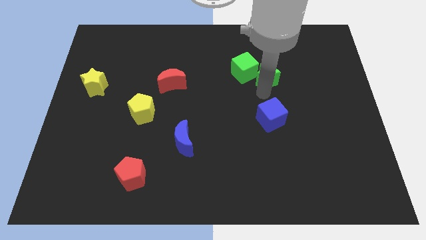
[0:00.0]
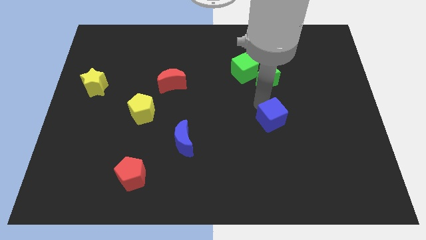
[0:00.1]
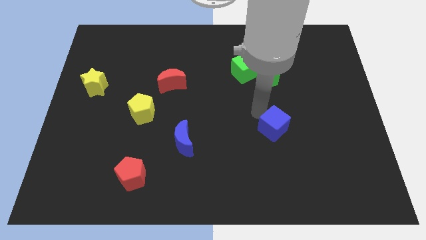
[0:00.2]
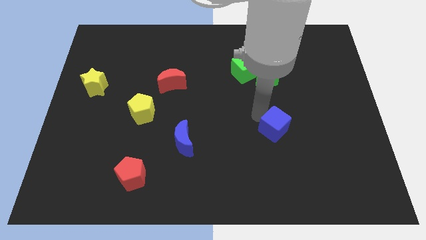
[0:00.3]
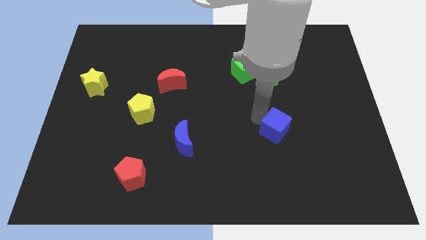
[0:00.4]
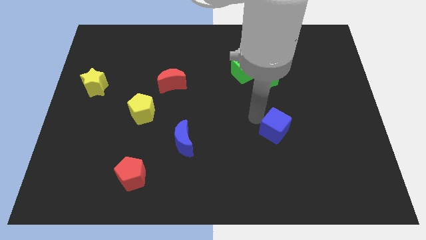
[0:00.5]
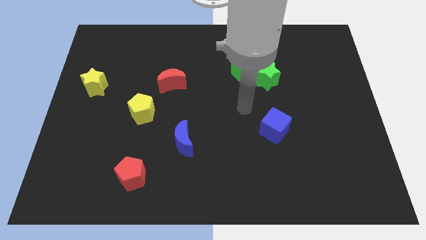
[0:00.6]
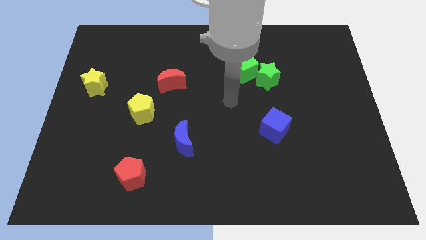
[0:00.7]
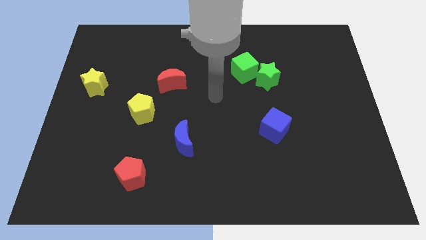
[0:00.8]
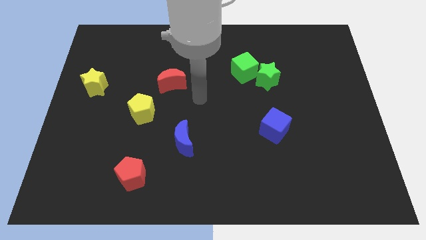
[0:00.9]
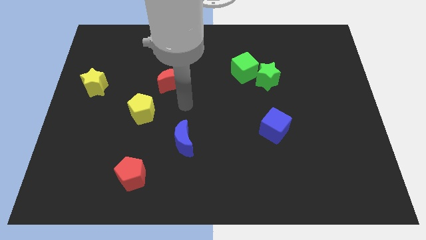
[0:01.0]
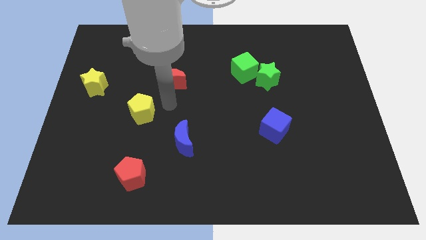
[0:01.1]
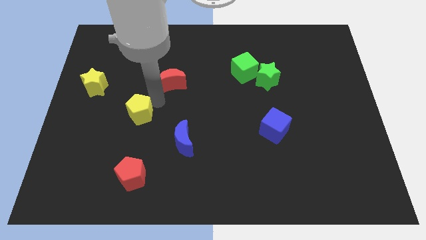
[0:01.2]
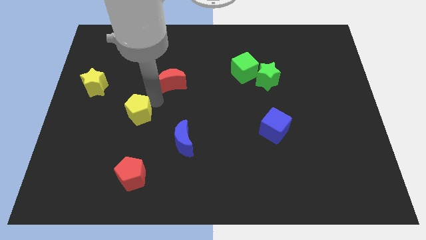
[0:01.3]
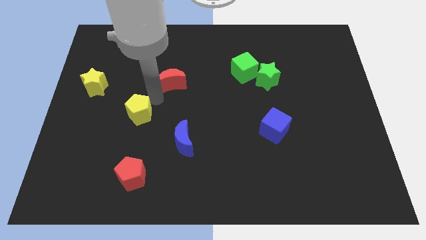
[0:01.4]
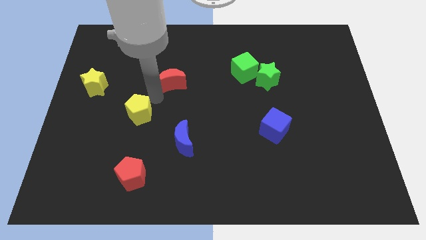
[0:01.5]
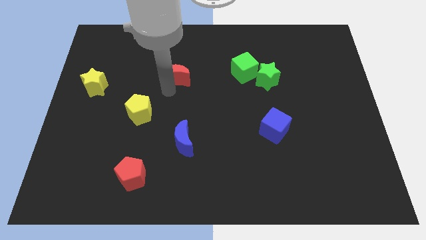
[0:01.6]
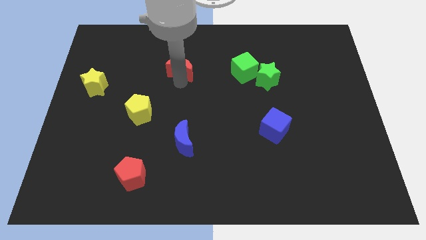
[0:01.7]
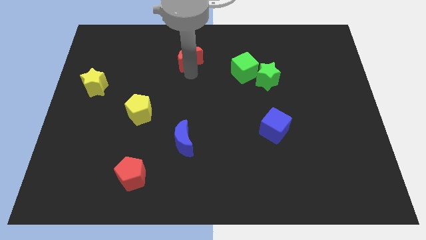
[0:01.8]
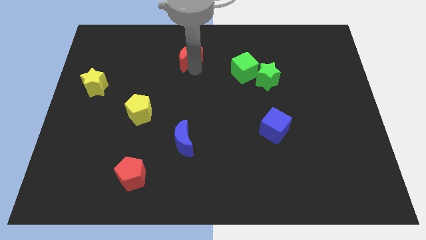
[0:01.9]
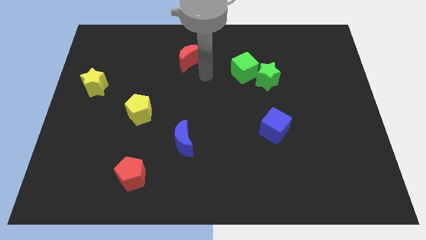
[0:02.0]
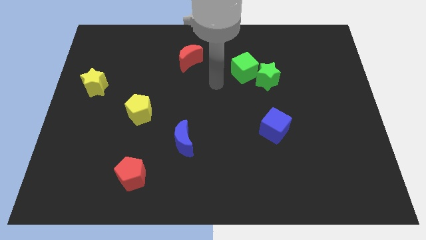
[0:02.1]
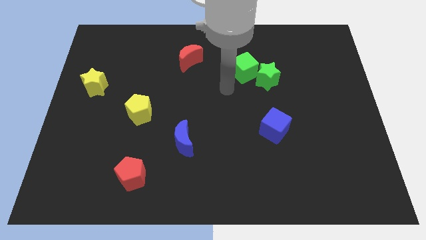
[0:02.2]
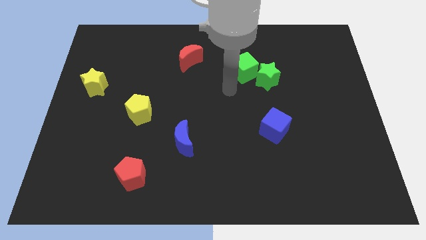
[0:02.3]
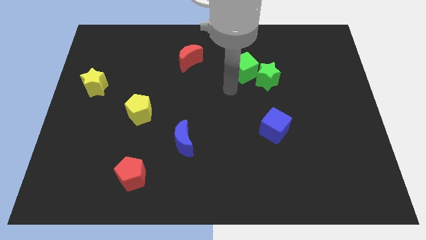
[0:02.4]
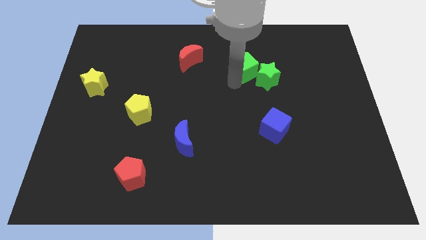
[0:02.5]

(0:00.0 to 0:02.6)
push the red moon upward

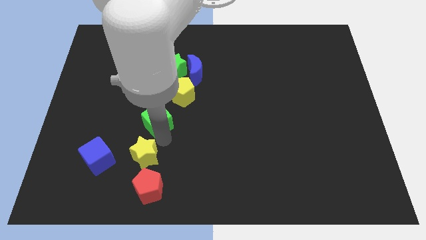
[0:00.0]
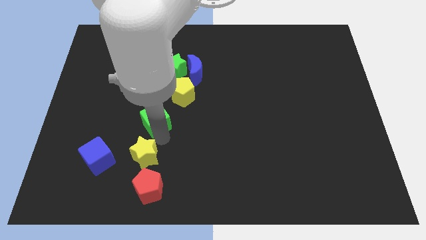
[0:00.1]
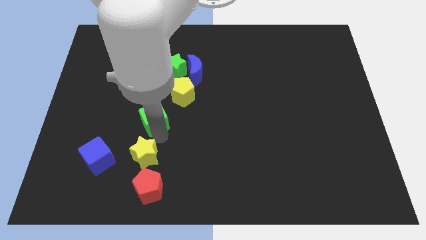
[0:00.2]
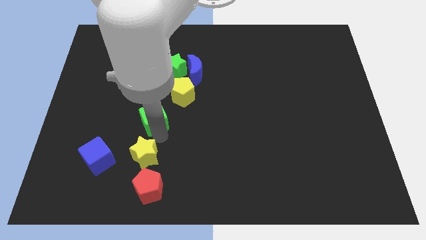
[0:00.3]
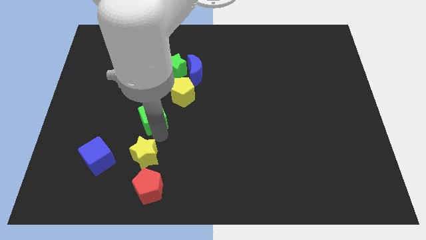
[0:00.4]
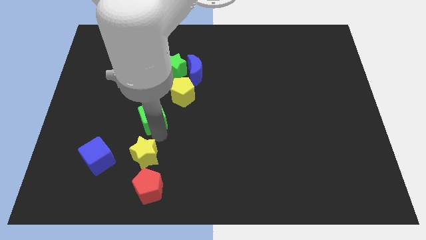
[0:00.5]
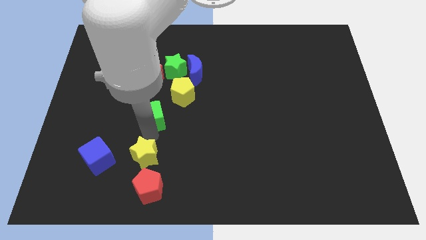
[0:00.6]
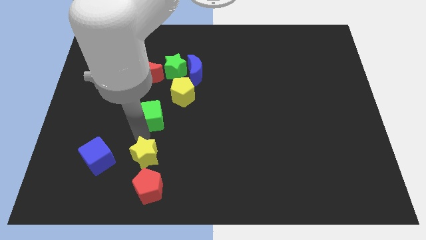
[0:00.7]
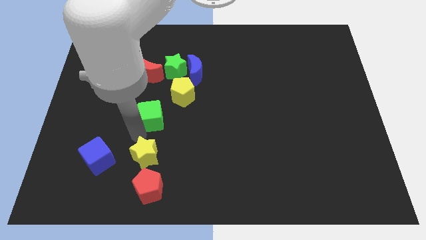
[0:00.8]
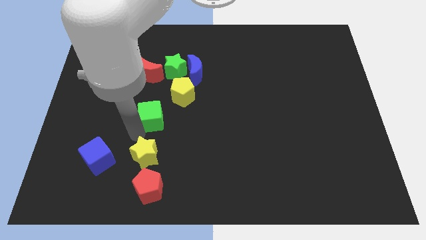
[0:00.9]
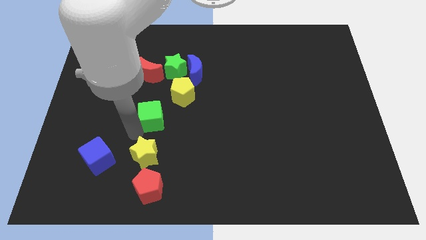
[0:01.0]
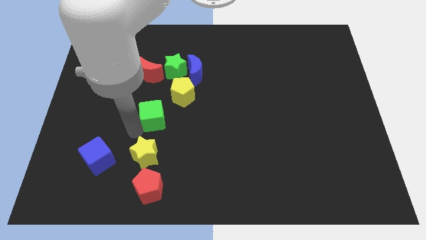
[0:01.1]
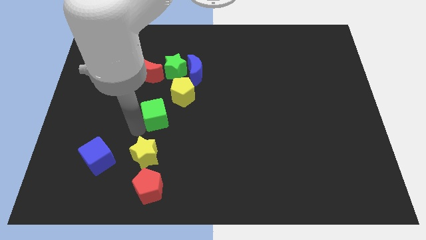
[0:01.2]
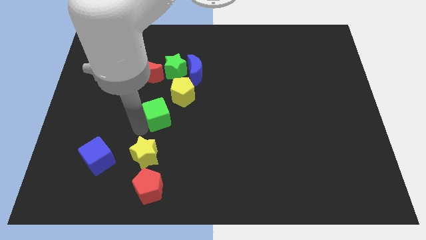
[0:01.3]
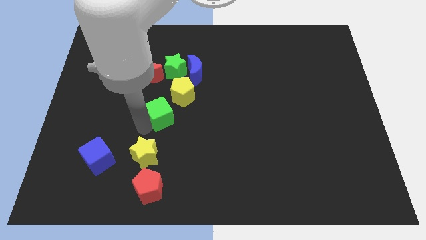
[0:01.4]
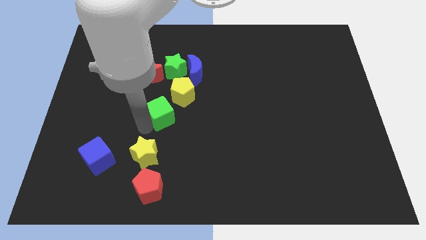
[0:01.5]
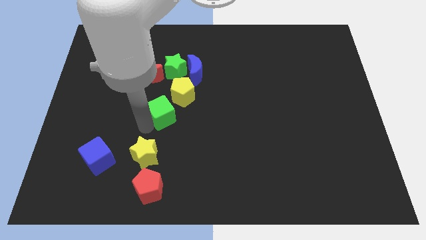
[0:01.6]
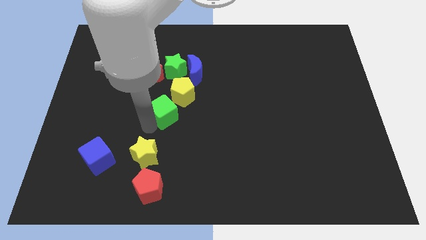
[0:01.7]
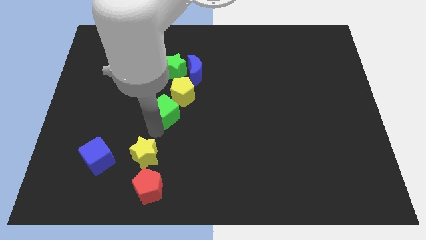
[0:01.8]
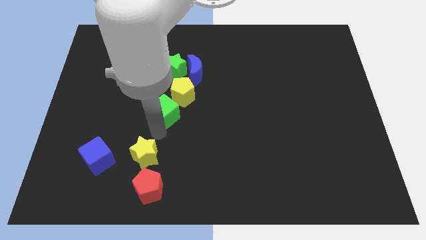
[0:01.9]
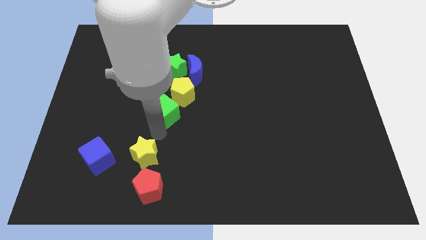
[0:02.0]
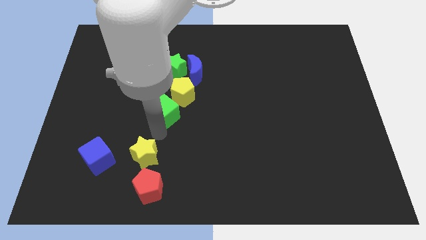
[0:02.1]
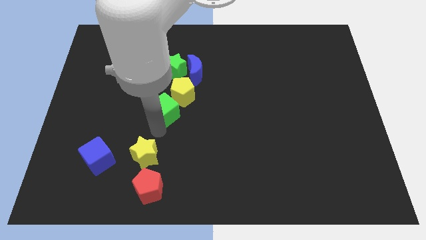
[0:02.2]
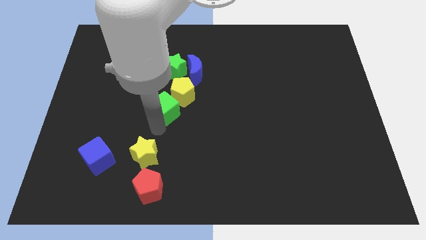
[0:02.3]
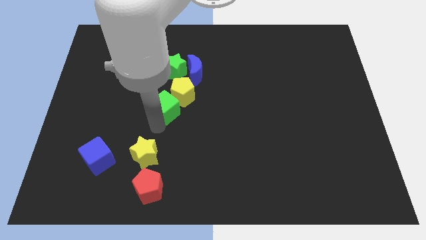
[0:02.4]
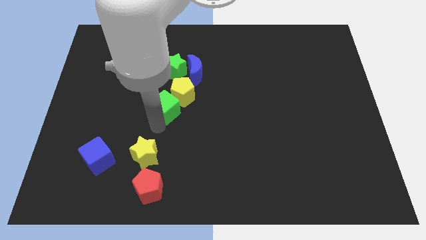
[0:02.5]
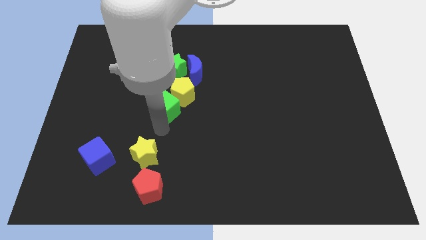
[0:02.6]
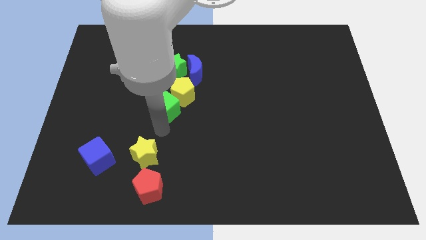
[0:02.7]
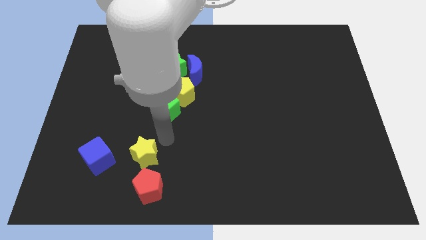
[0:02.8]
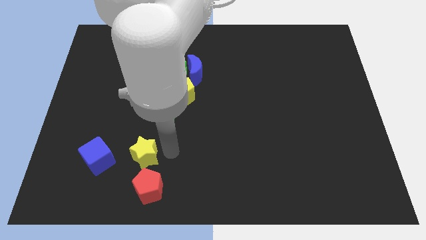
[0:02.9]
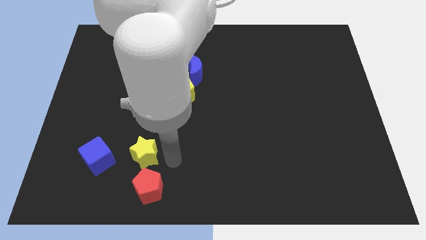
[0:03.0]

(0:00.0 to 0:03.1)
put the green cube at the bottom left of the yellow pentagon

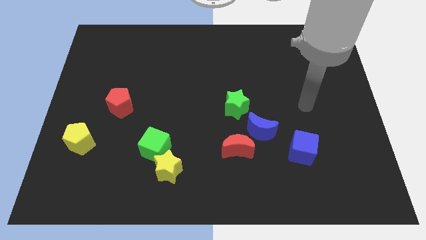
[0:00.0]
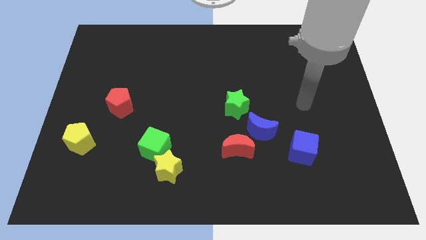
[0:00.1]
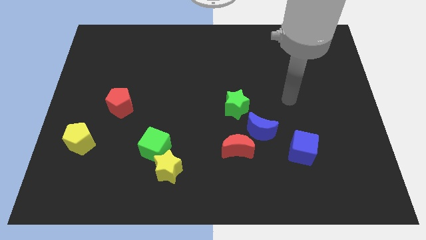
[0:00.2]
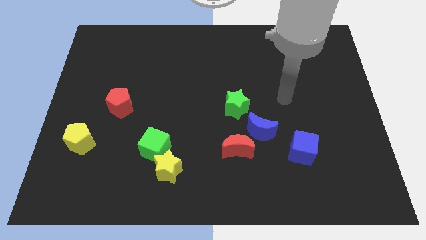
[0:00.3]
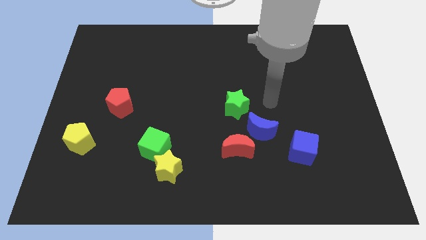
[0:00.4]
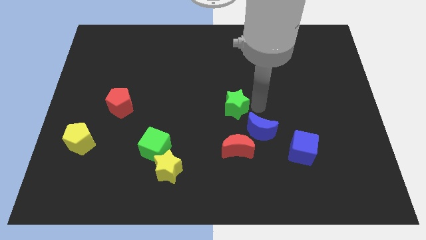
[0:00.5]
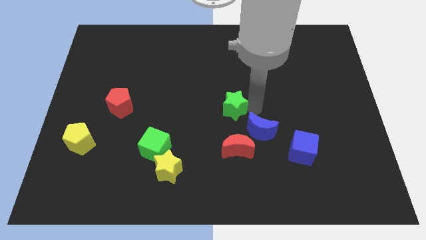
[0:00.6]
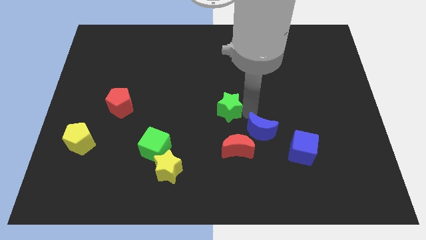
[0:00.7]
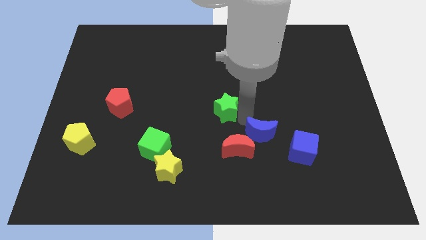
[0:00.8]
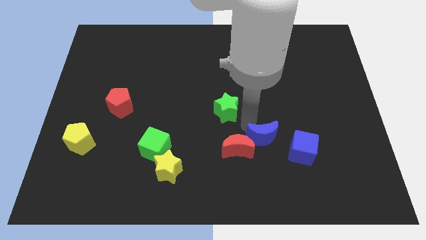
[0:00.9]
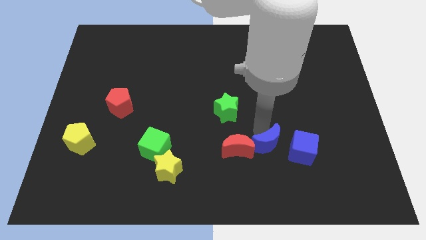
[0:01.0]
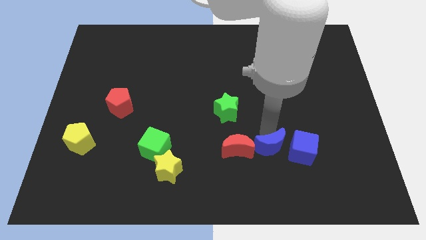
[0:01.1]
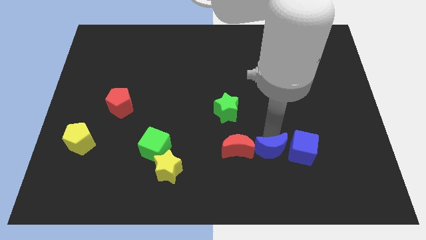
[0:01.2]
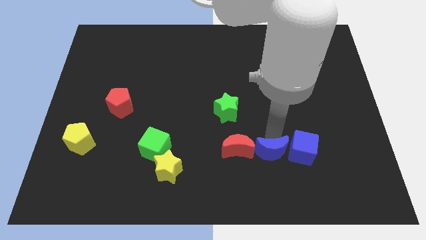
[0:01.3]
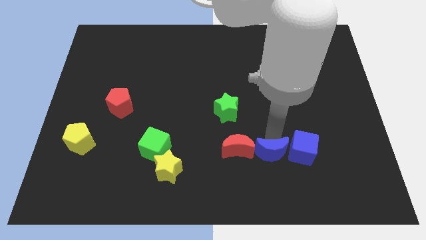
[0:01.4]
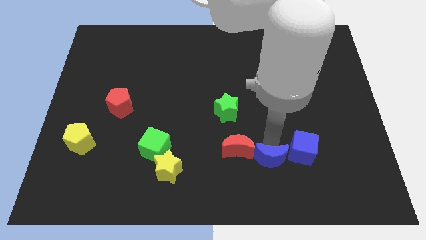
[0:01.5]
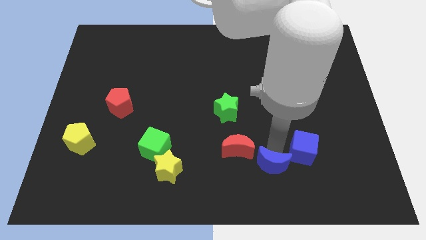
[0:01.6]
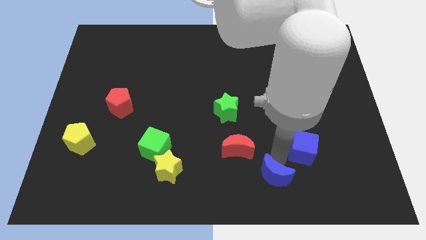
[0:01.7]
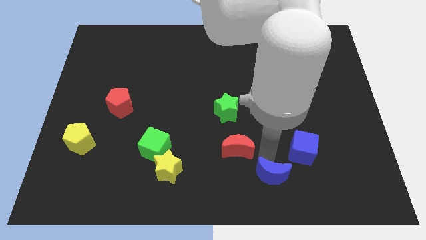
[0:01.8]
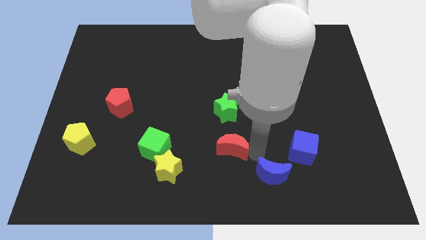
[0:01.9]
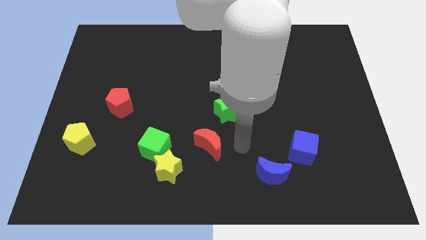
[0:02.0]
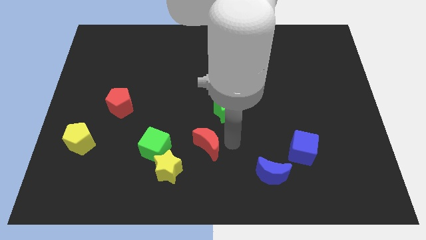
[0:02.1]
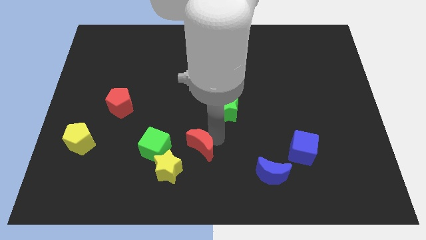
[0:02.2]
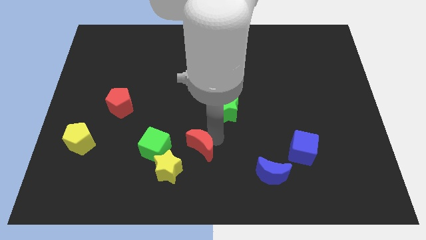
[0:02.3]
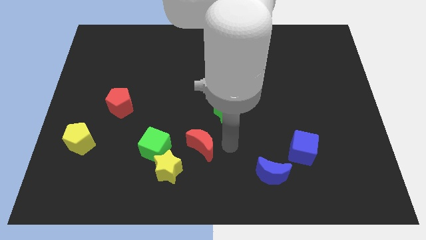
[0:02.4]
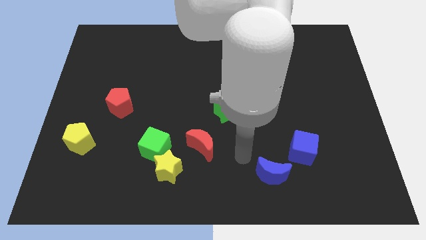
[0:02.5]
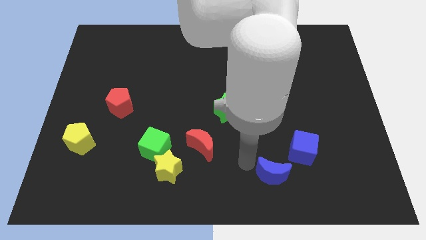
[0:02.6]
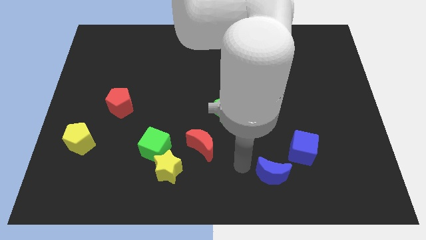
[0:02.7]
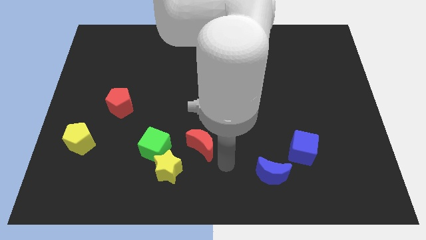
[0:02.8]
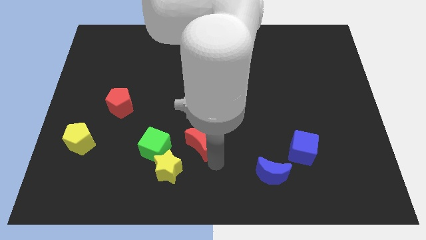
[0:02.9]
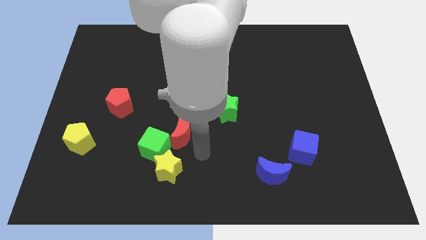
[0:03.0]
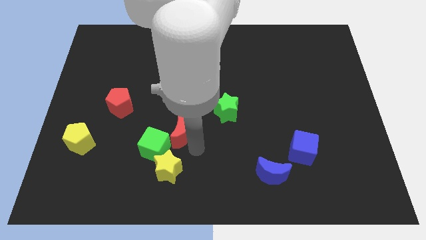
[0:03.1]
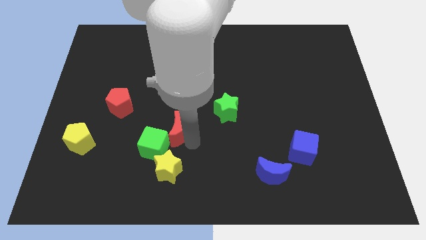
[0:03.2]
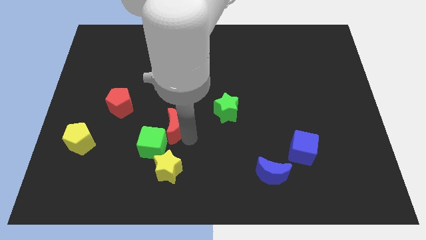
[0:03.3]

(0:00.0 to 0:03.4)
push the red moon to the top right side of the green cube

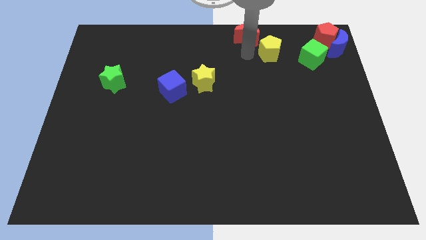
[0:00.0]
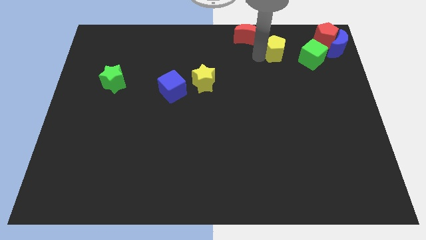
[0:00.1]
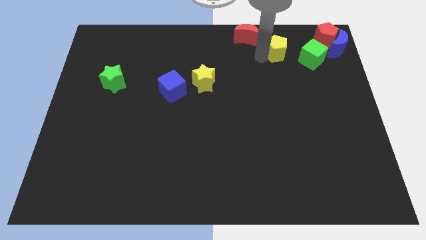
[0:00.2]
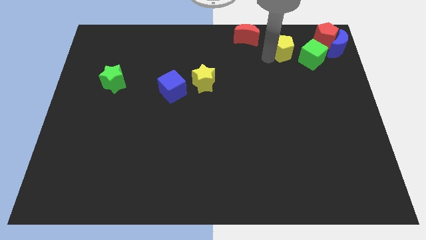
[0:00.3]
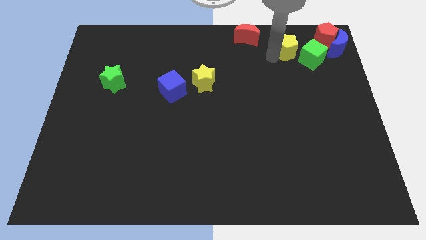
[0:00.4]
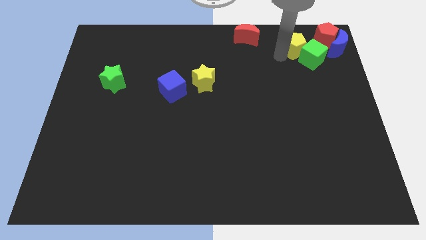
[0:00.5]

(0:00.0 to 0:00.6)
push the yellow pentagon into the green block
